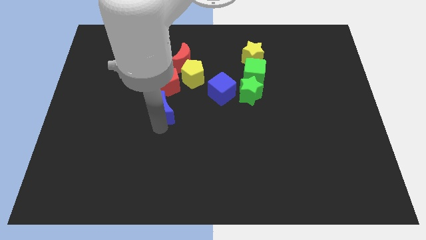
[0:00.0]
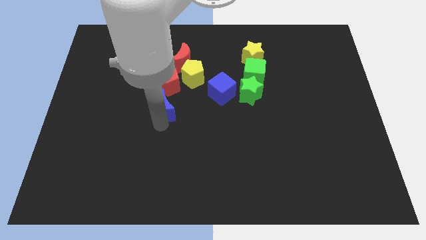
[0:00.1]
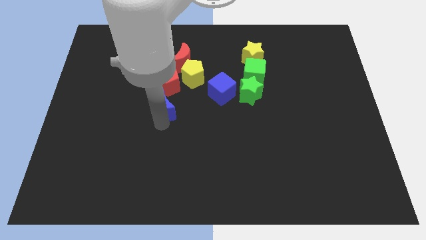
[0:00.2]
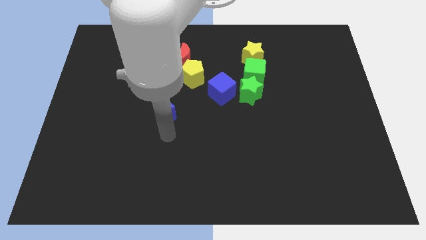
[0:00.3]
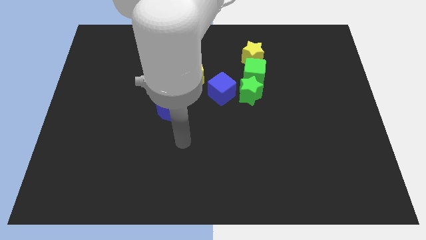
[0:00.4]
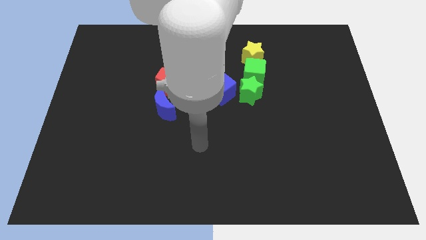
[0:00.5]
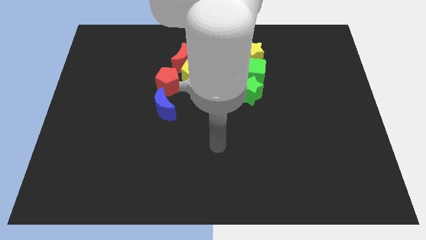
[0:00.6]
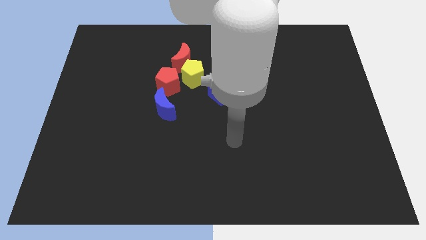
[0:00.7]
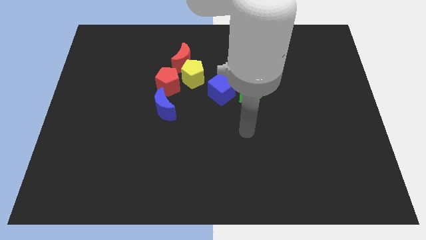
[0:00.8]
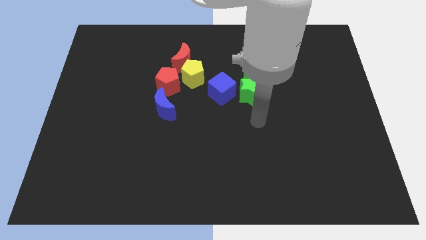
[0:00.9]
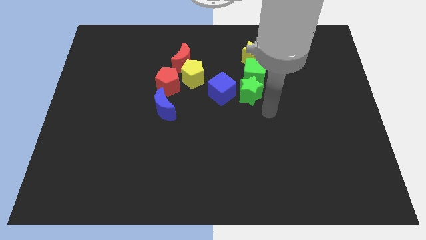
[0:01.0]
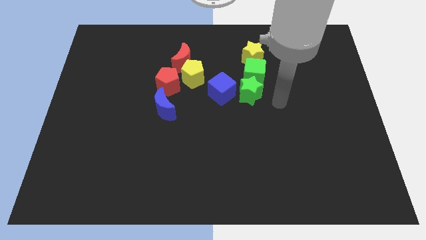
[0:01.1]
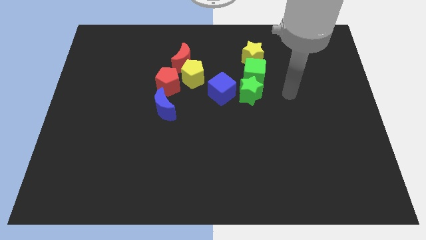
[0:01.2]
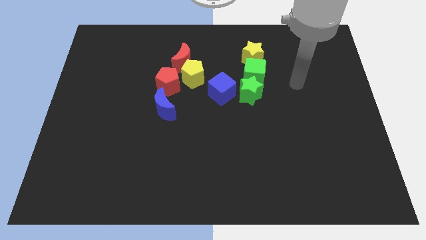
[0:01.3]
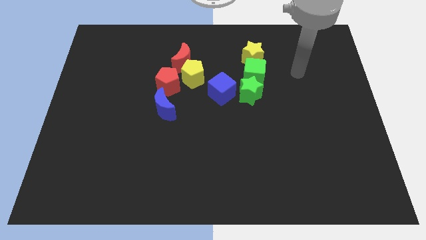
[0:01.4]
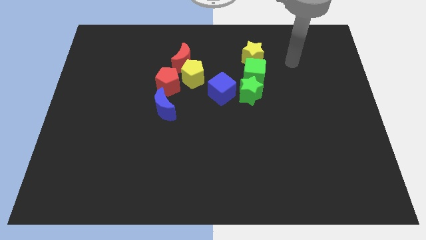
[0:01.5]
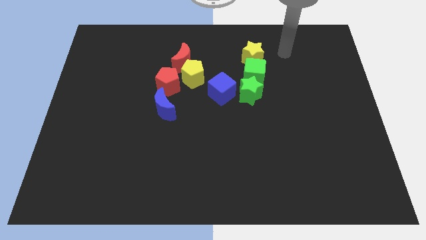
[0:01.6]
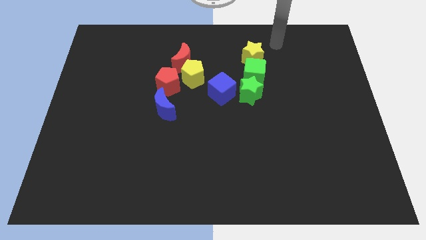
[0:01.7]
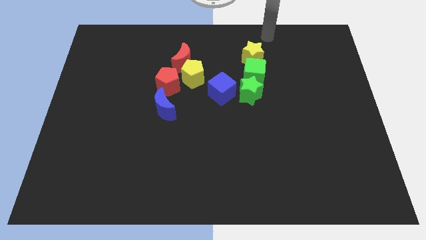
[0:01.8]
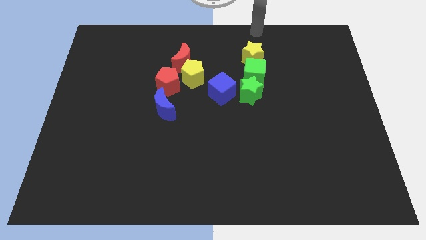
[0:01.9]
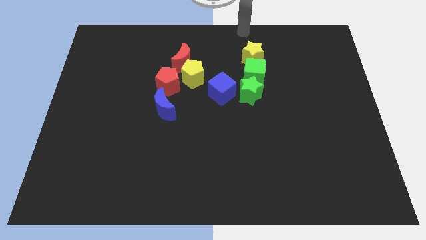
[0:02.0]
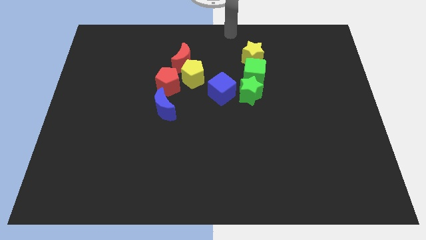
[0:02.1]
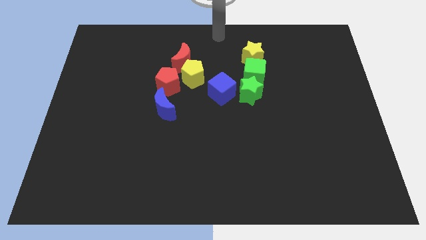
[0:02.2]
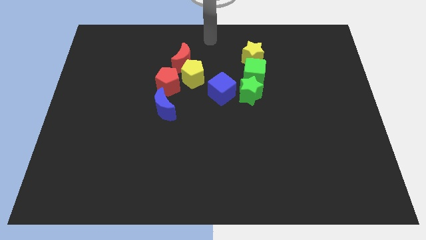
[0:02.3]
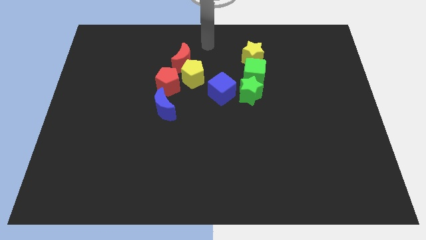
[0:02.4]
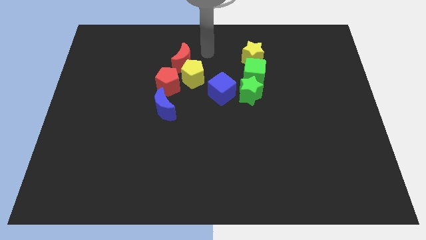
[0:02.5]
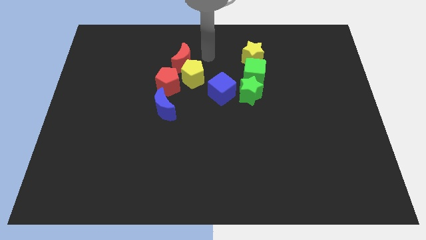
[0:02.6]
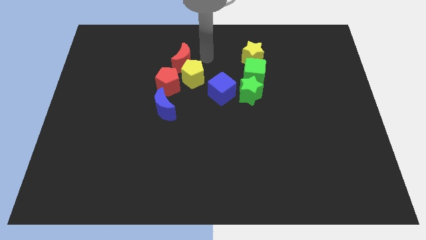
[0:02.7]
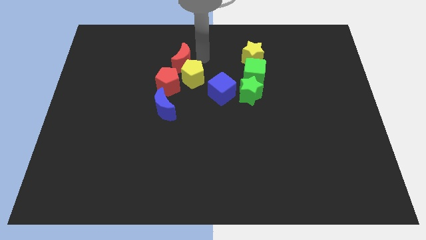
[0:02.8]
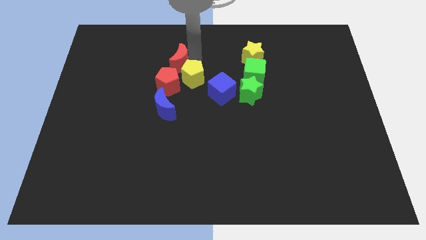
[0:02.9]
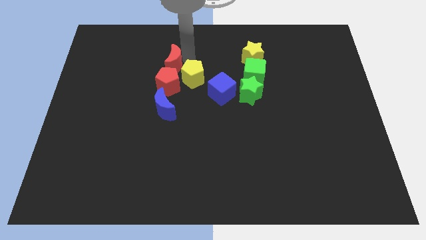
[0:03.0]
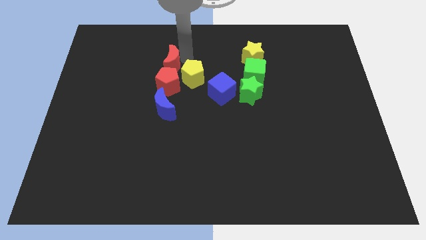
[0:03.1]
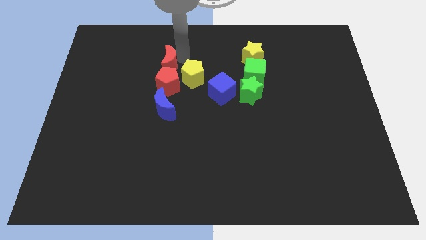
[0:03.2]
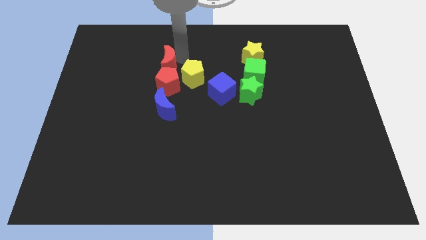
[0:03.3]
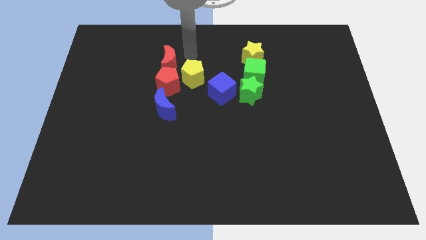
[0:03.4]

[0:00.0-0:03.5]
move your arm to the red moon

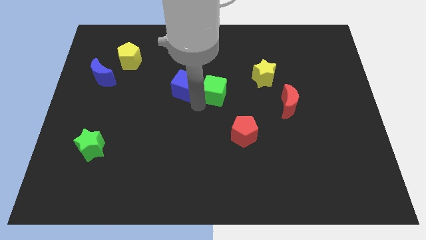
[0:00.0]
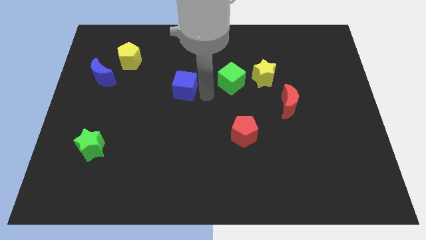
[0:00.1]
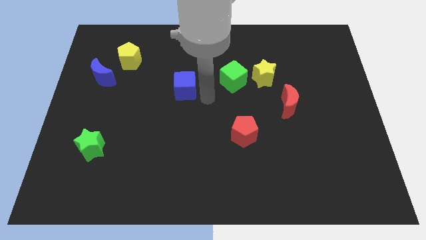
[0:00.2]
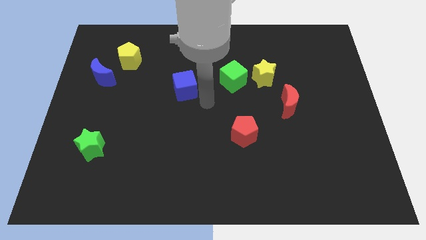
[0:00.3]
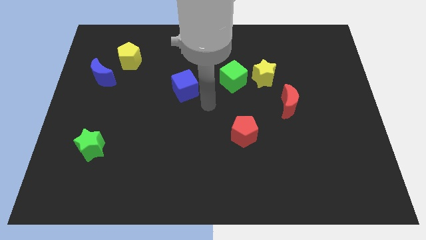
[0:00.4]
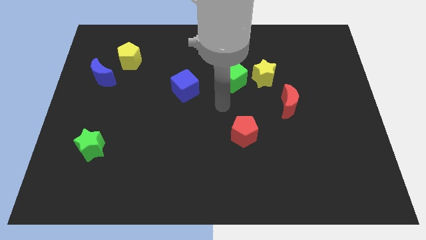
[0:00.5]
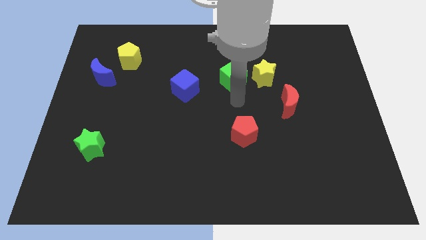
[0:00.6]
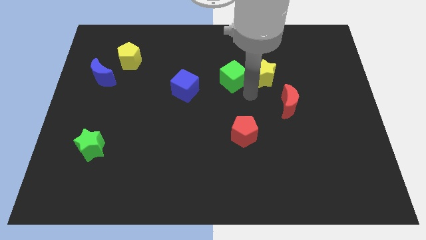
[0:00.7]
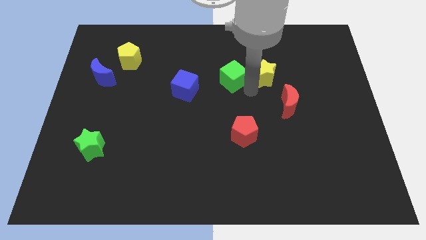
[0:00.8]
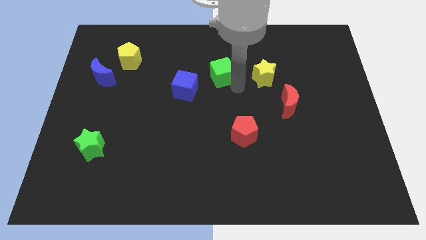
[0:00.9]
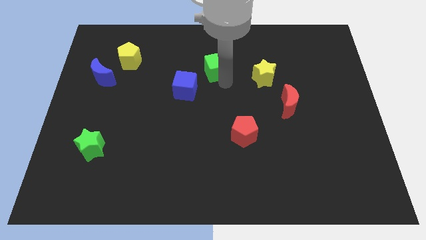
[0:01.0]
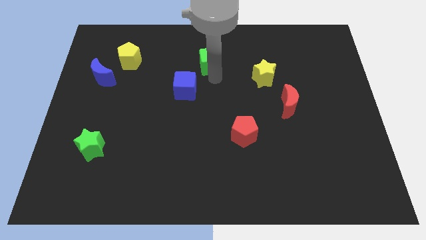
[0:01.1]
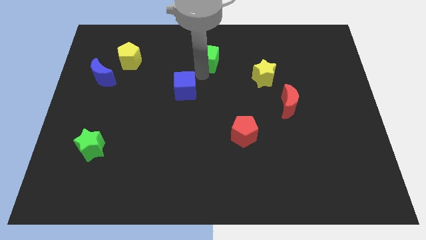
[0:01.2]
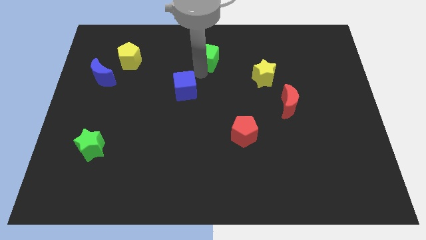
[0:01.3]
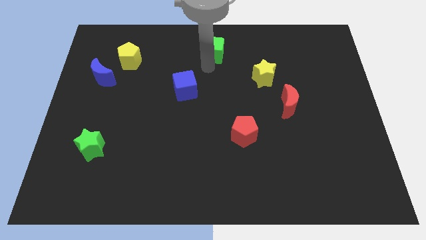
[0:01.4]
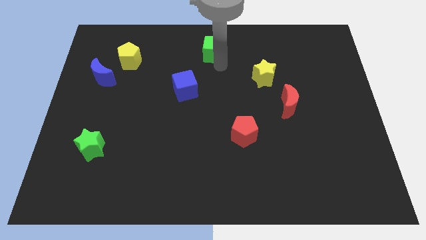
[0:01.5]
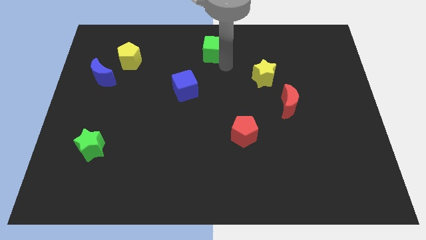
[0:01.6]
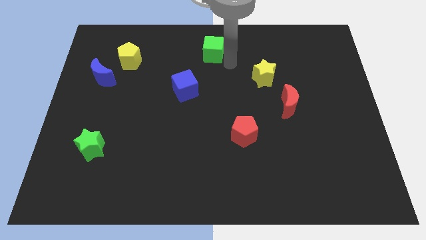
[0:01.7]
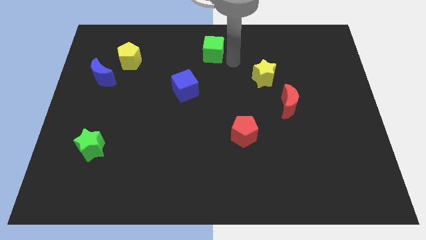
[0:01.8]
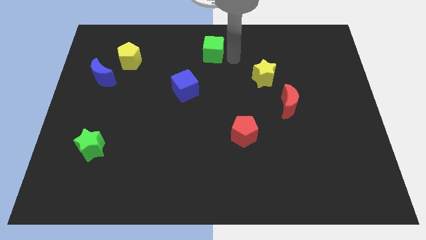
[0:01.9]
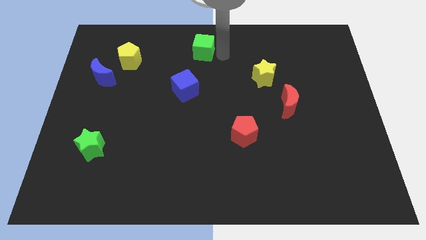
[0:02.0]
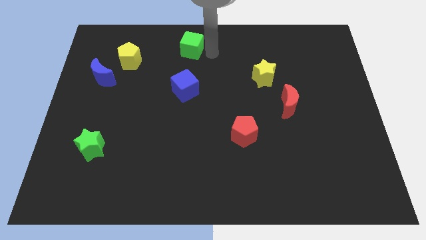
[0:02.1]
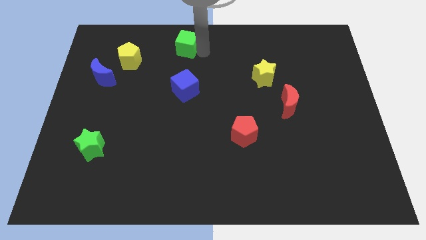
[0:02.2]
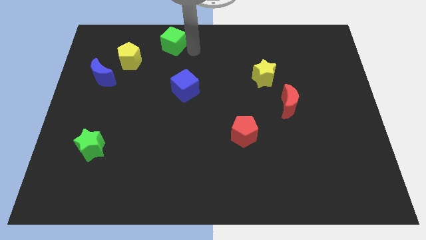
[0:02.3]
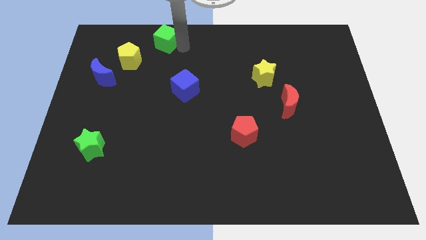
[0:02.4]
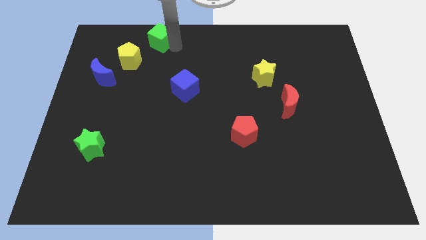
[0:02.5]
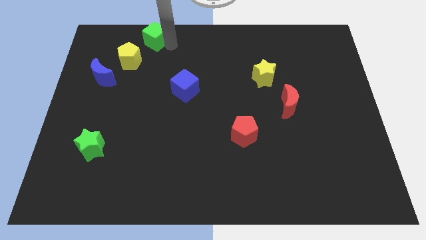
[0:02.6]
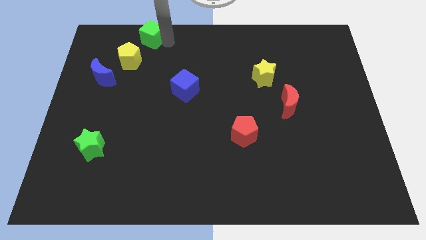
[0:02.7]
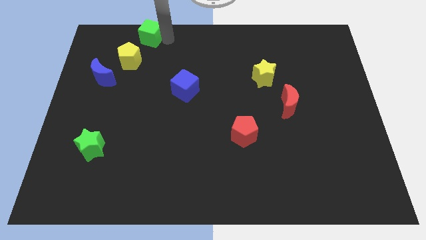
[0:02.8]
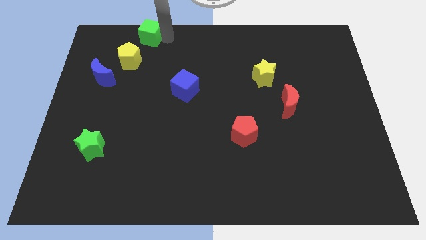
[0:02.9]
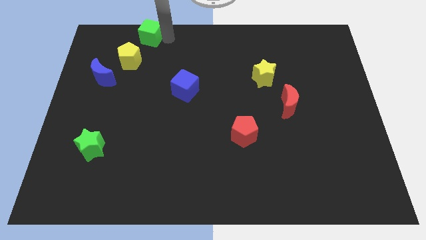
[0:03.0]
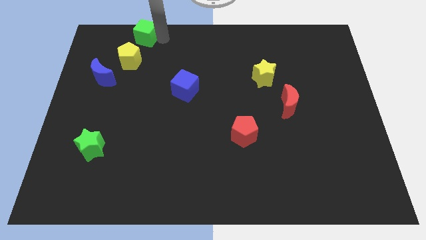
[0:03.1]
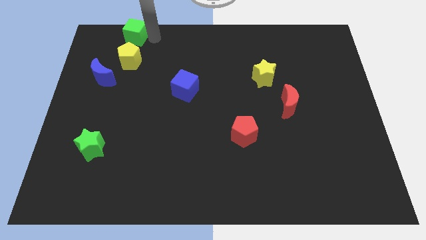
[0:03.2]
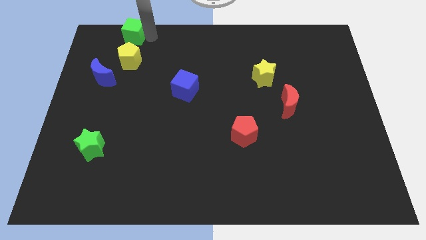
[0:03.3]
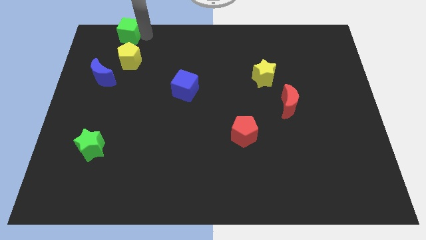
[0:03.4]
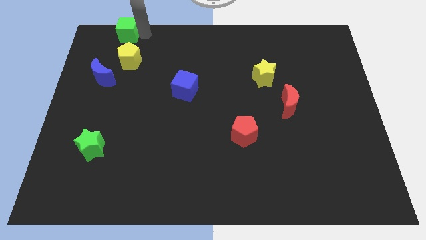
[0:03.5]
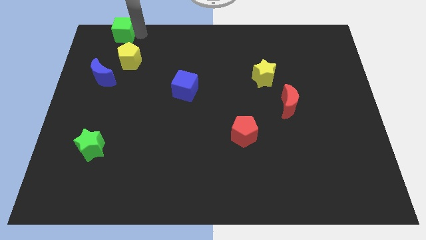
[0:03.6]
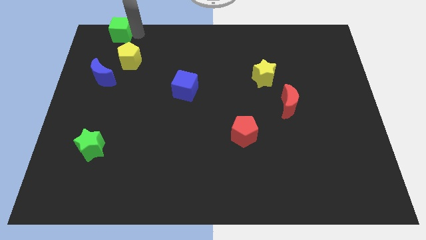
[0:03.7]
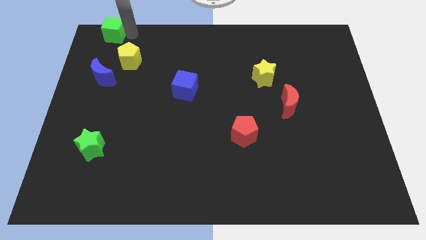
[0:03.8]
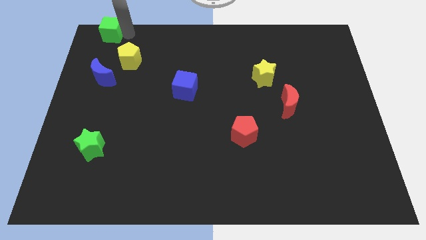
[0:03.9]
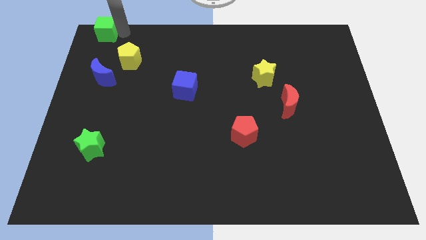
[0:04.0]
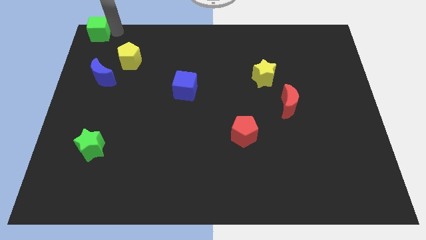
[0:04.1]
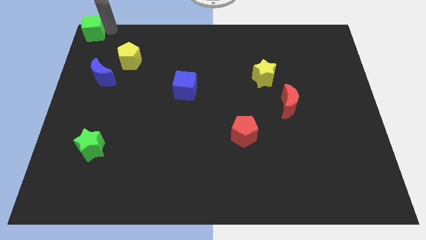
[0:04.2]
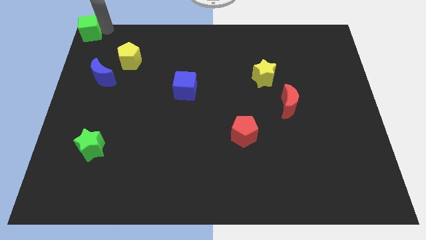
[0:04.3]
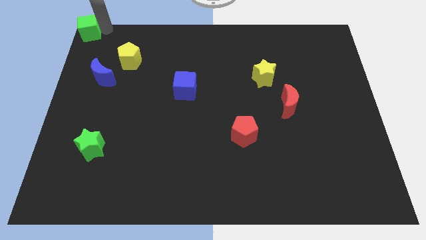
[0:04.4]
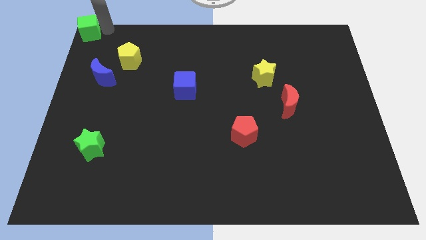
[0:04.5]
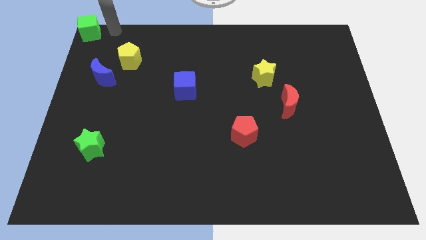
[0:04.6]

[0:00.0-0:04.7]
place the green cube above the blue moon

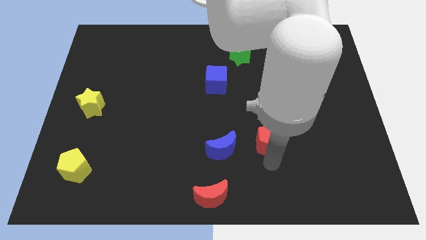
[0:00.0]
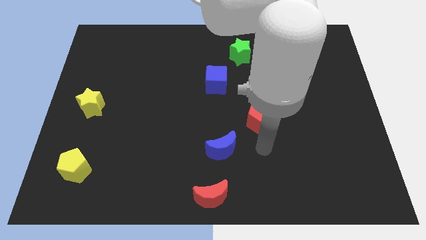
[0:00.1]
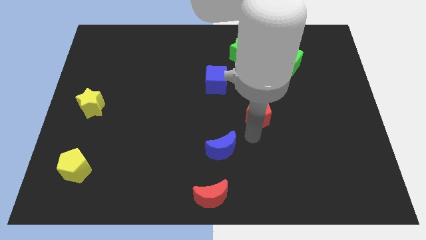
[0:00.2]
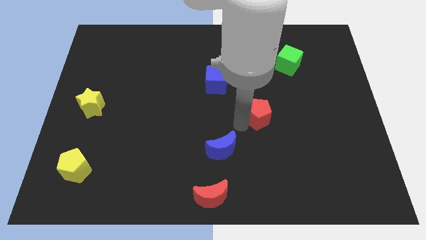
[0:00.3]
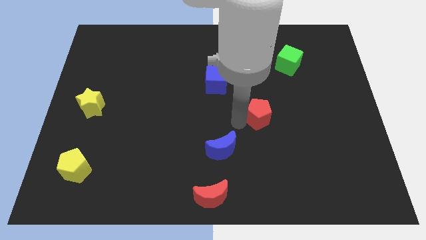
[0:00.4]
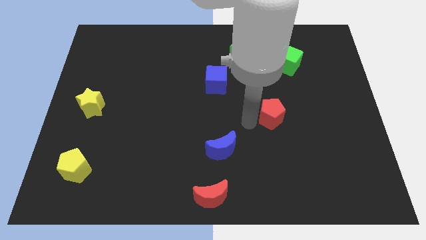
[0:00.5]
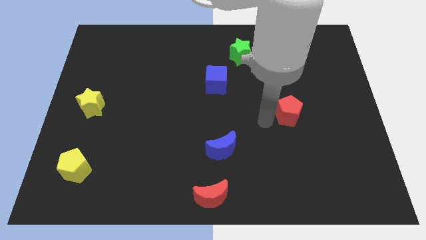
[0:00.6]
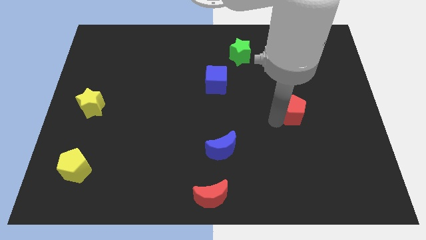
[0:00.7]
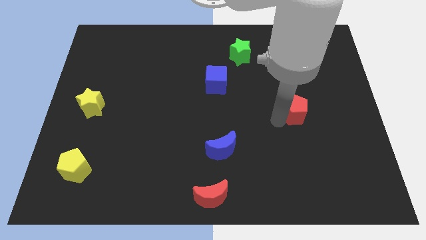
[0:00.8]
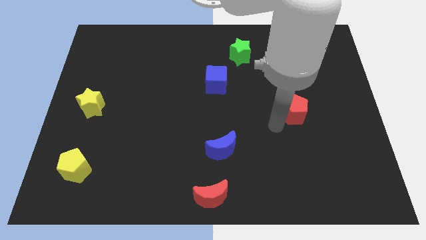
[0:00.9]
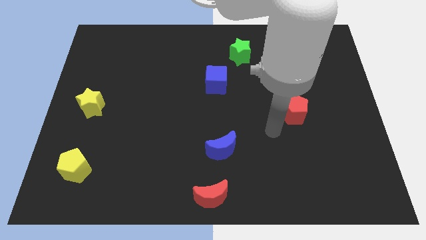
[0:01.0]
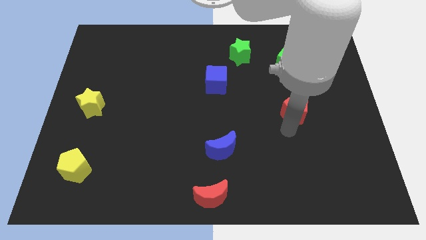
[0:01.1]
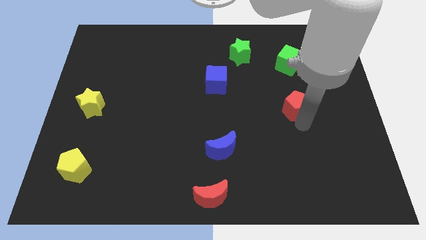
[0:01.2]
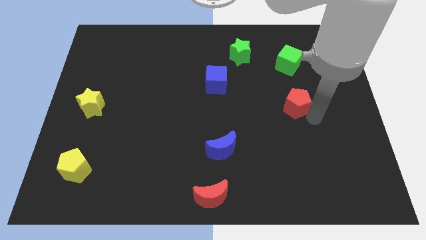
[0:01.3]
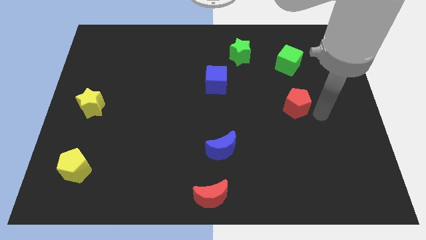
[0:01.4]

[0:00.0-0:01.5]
push the red pentagon towards the bottom of green cube
